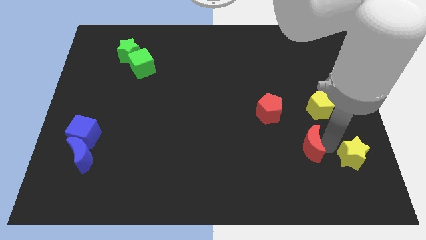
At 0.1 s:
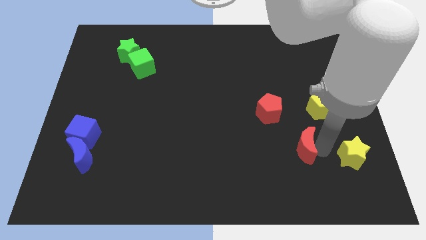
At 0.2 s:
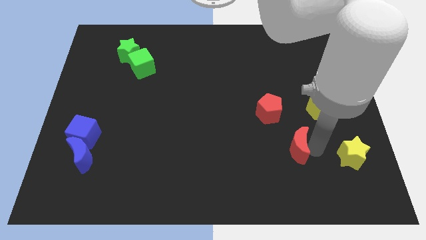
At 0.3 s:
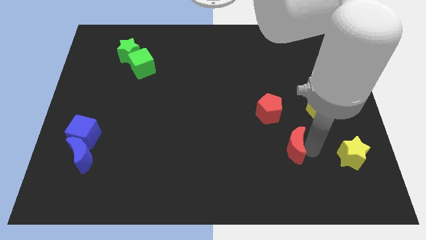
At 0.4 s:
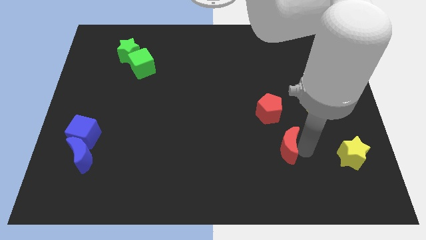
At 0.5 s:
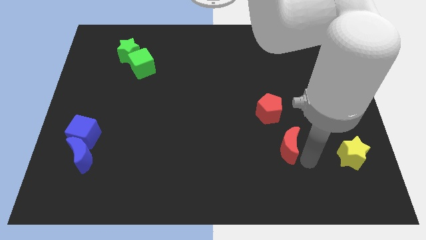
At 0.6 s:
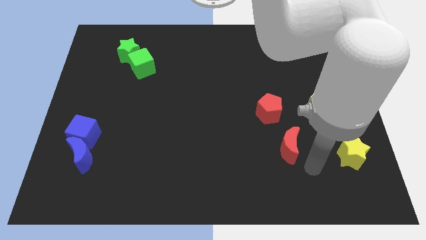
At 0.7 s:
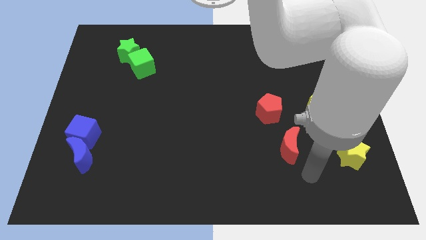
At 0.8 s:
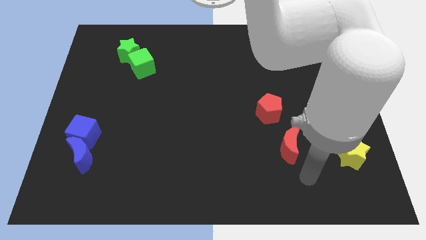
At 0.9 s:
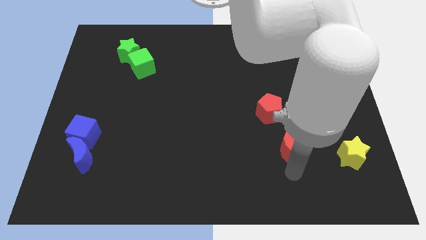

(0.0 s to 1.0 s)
move red moon right below the red pentagon

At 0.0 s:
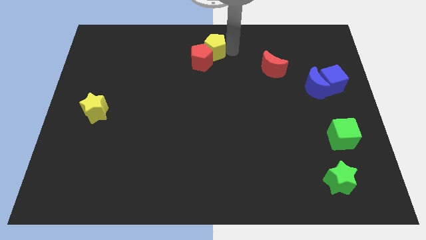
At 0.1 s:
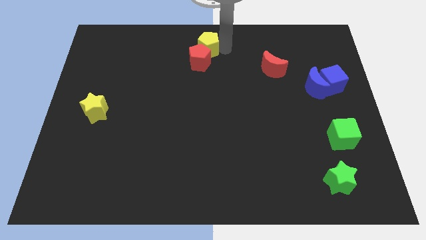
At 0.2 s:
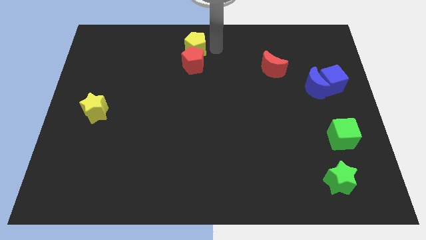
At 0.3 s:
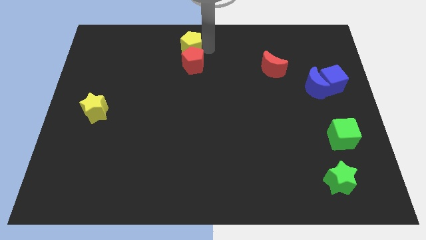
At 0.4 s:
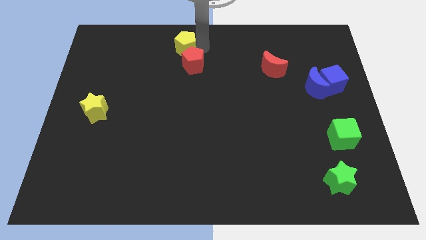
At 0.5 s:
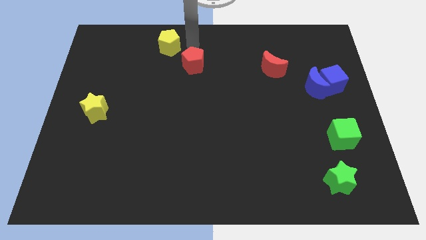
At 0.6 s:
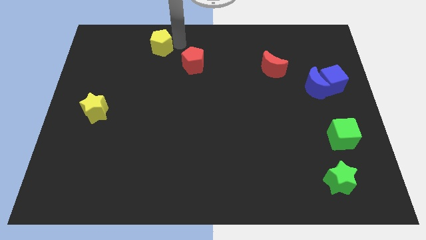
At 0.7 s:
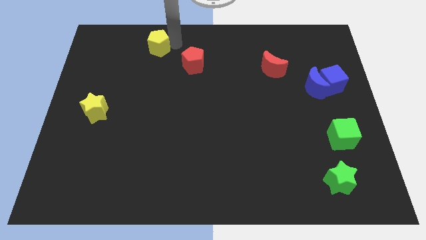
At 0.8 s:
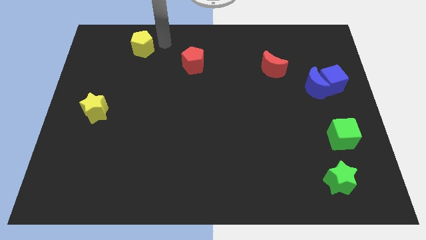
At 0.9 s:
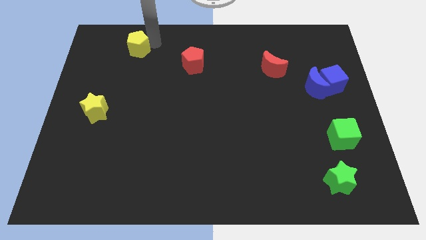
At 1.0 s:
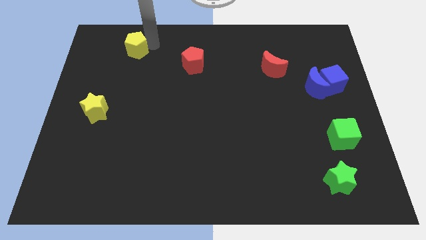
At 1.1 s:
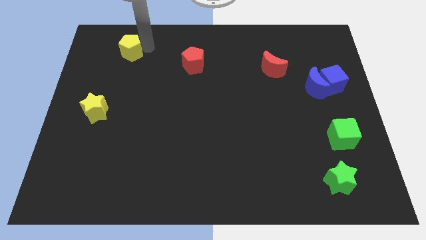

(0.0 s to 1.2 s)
separate the yellow pentagon from red pentagon

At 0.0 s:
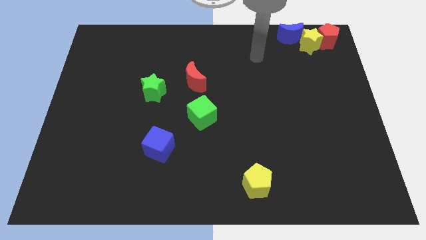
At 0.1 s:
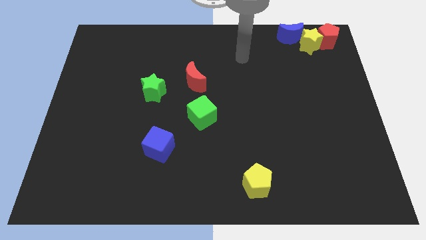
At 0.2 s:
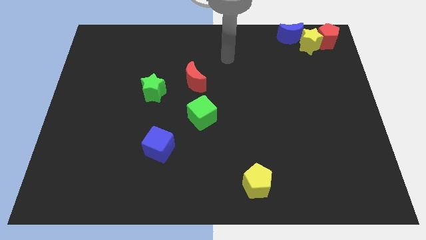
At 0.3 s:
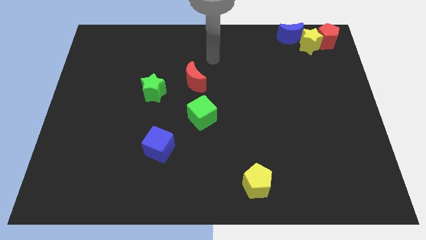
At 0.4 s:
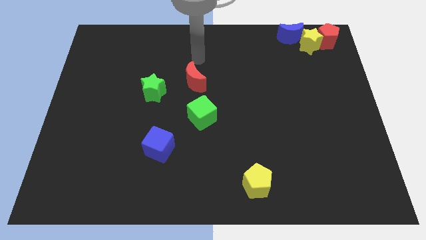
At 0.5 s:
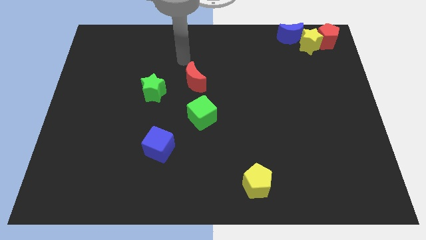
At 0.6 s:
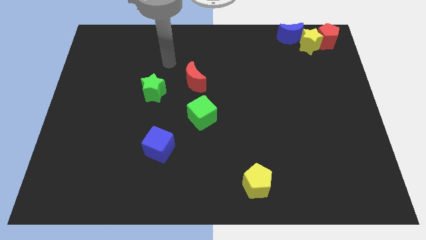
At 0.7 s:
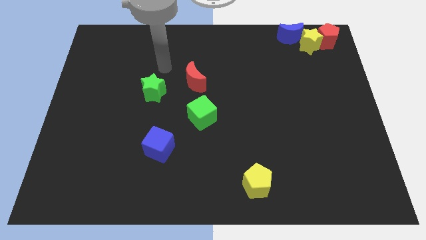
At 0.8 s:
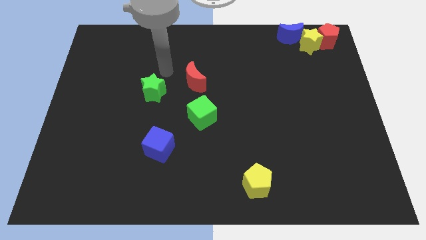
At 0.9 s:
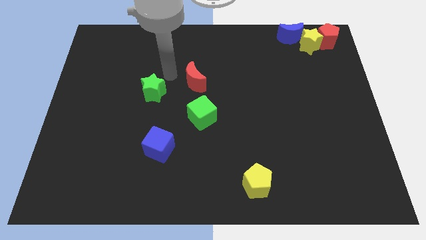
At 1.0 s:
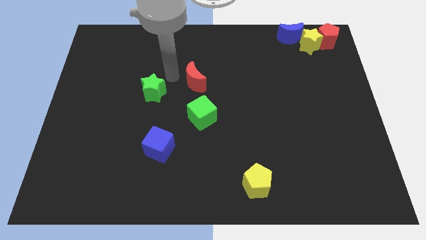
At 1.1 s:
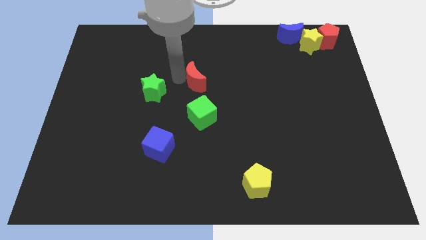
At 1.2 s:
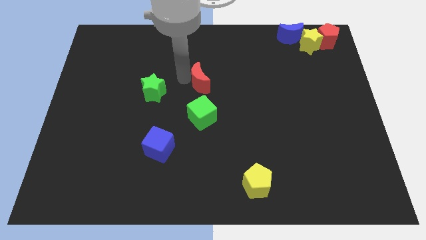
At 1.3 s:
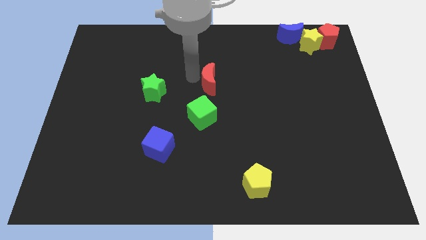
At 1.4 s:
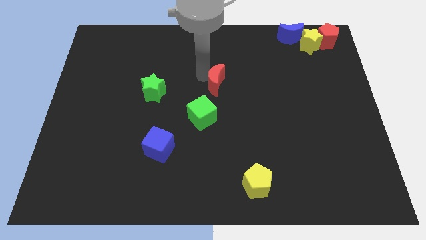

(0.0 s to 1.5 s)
place the red moon above the green cube

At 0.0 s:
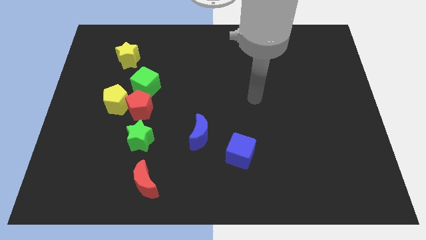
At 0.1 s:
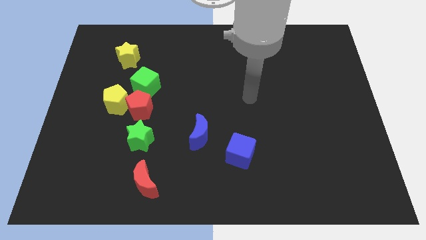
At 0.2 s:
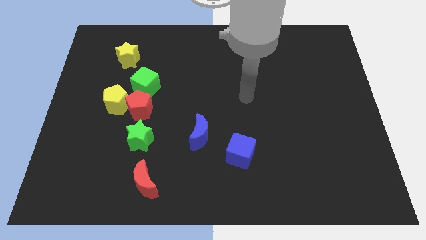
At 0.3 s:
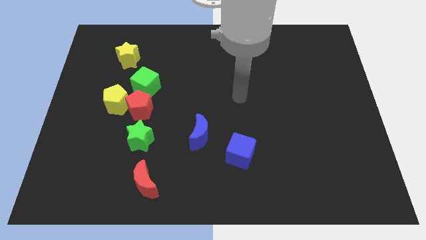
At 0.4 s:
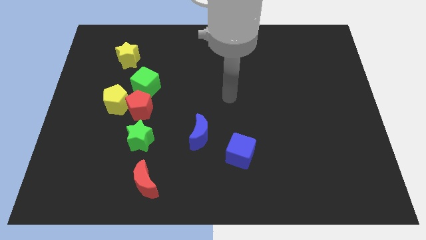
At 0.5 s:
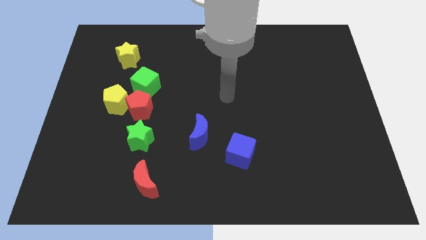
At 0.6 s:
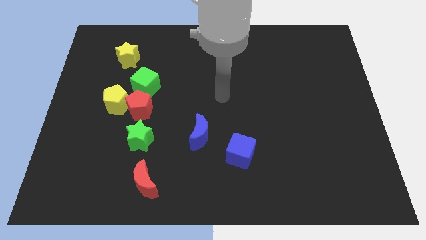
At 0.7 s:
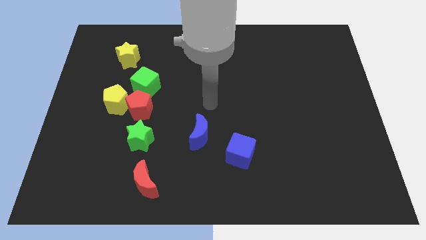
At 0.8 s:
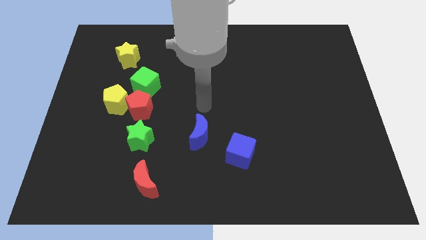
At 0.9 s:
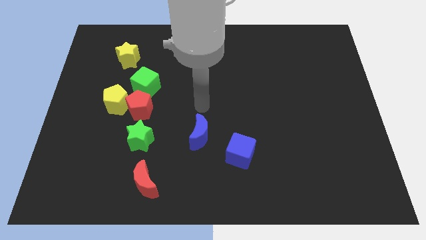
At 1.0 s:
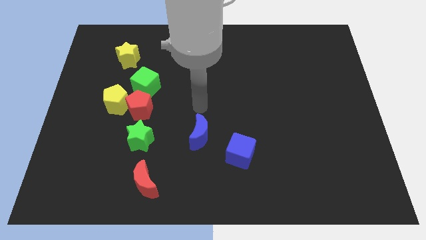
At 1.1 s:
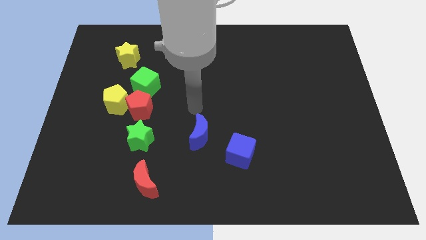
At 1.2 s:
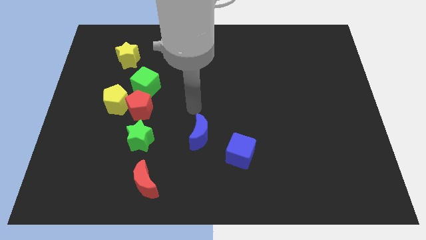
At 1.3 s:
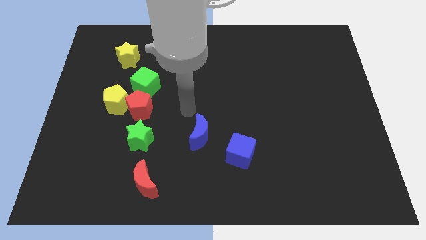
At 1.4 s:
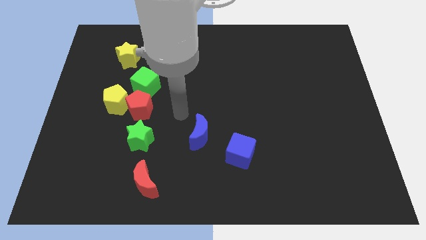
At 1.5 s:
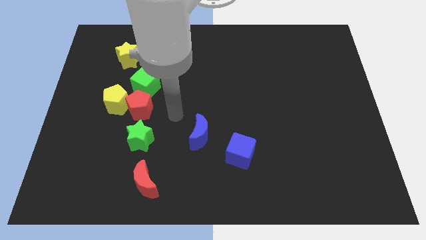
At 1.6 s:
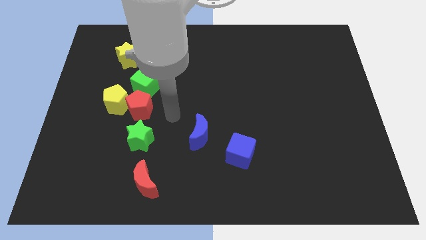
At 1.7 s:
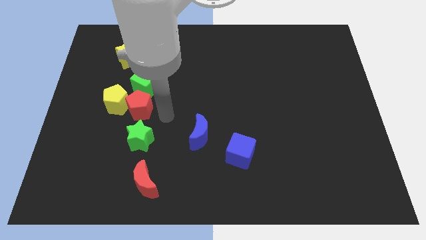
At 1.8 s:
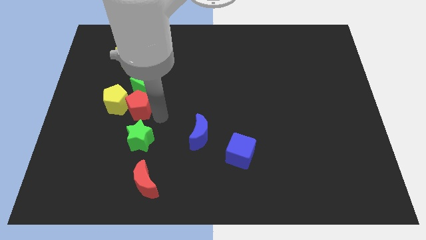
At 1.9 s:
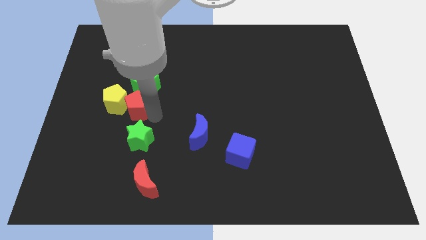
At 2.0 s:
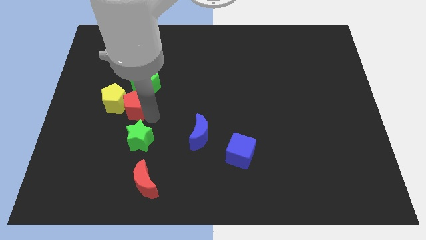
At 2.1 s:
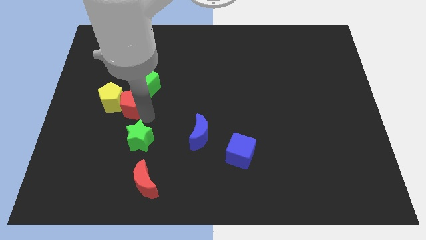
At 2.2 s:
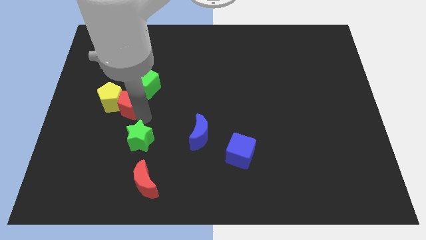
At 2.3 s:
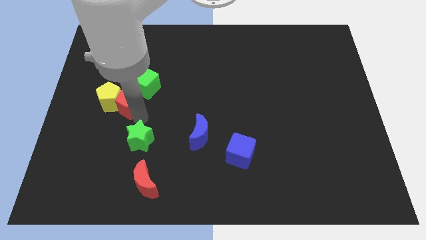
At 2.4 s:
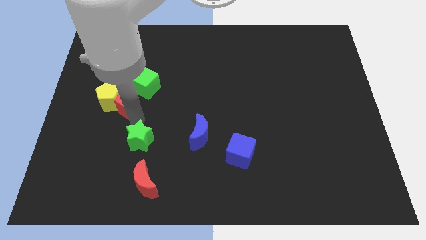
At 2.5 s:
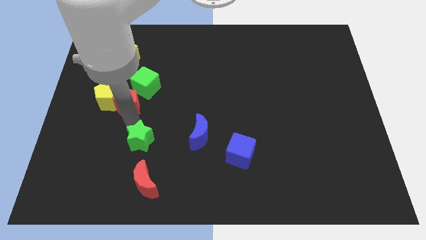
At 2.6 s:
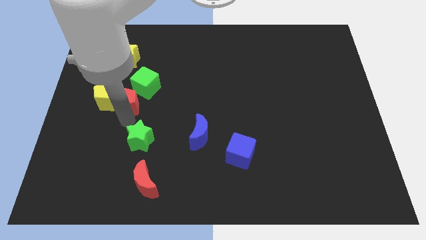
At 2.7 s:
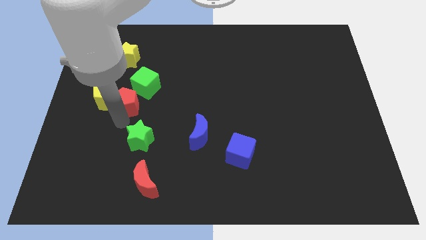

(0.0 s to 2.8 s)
move the red pentagon along with the yellow pentagon to the center left

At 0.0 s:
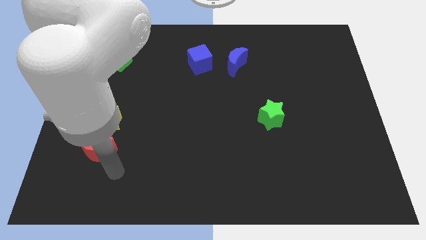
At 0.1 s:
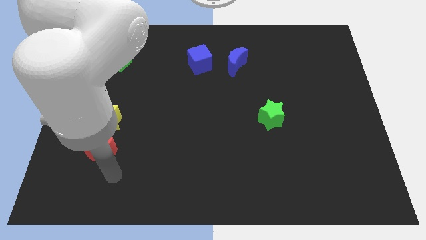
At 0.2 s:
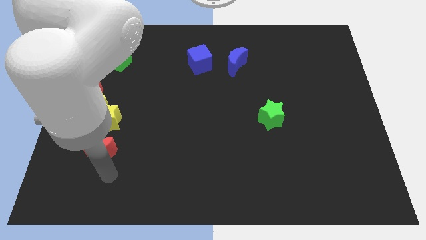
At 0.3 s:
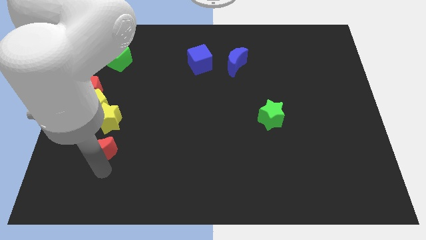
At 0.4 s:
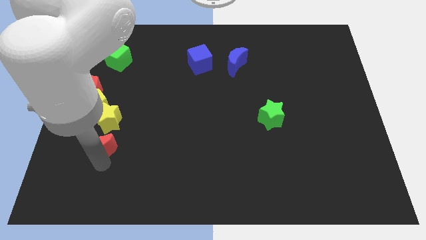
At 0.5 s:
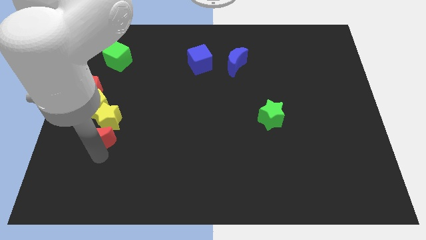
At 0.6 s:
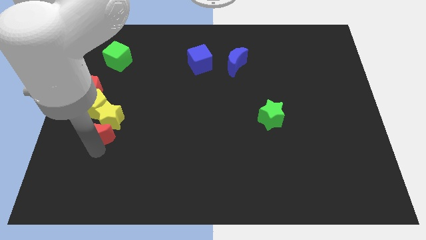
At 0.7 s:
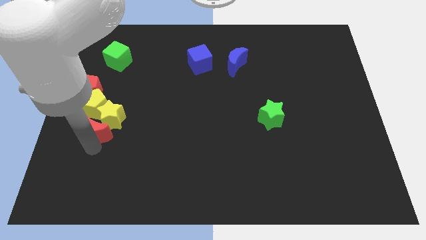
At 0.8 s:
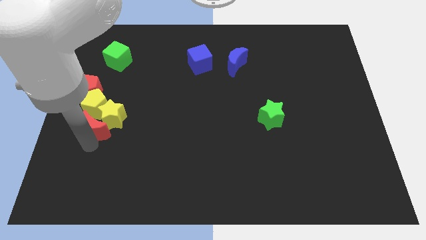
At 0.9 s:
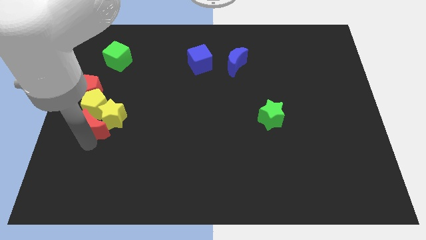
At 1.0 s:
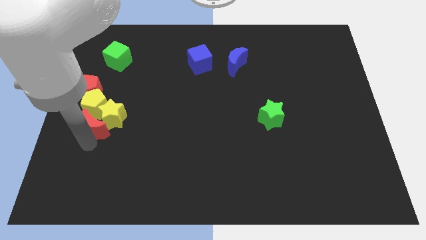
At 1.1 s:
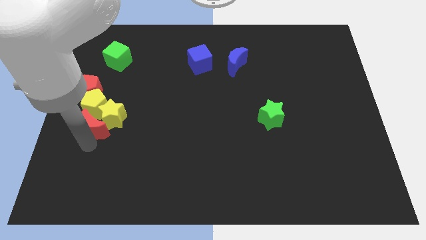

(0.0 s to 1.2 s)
place the red crescent below the yellow pentagon

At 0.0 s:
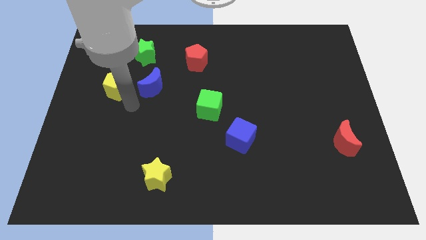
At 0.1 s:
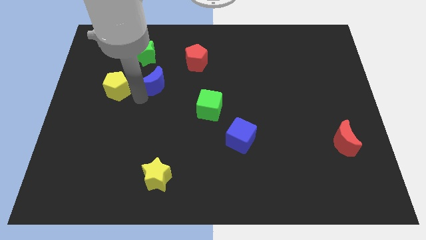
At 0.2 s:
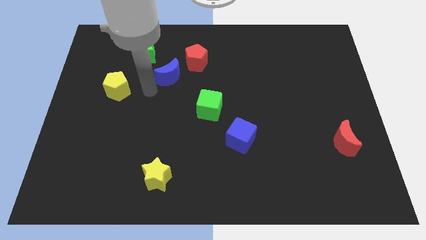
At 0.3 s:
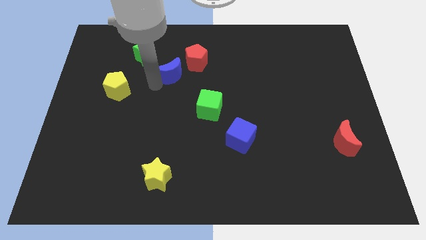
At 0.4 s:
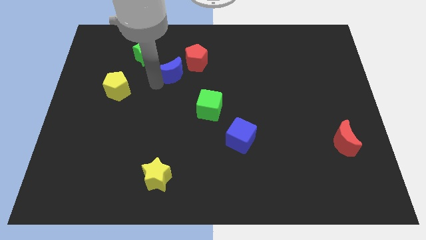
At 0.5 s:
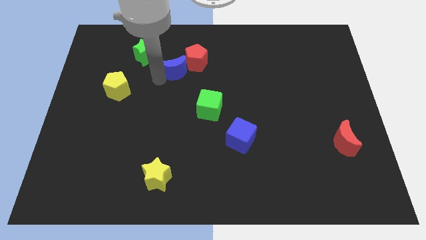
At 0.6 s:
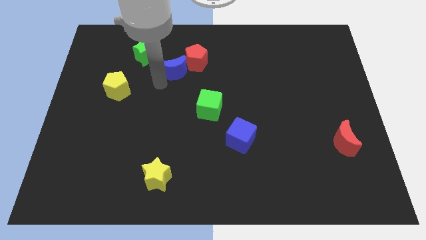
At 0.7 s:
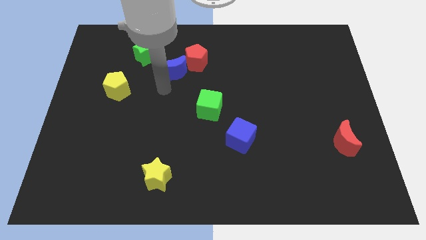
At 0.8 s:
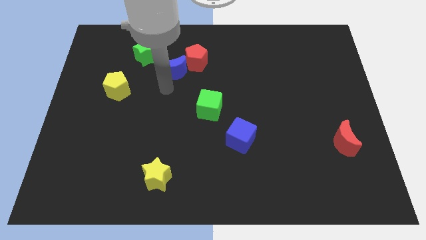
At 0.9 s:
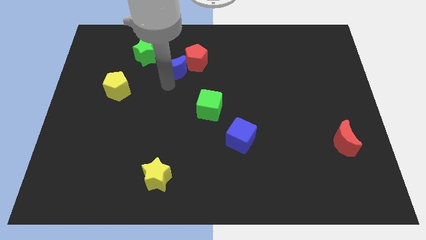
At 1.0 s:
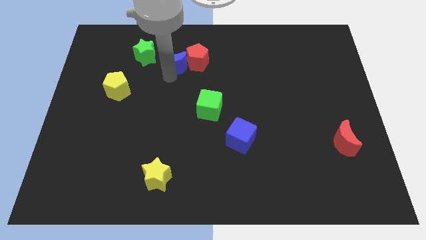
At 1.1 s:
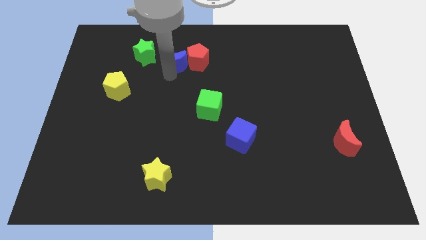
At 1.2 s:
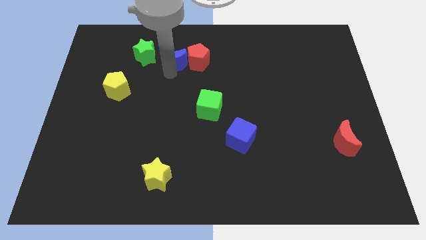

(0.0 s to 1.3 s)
push the blue moon into the red pentagon
